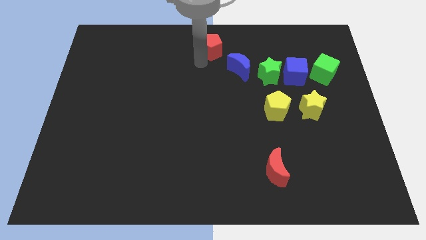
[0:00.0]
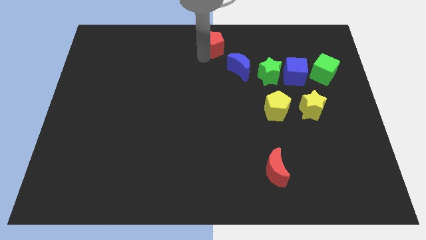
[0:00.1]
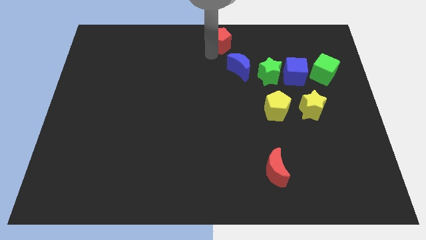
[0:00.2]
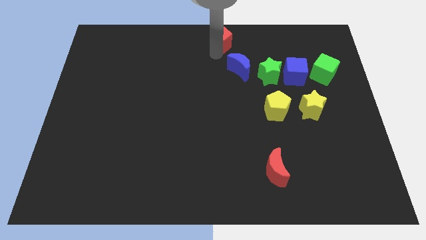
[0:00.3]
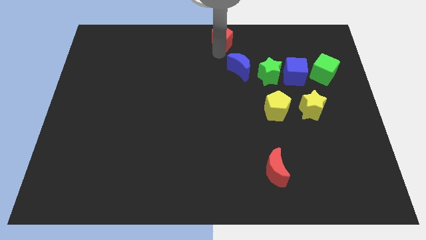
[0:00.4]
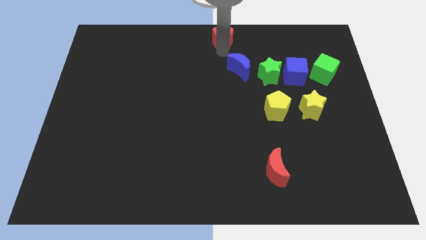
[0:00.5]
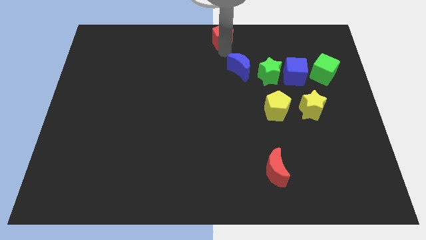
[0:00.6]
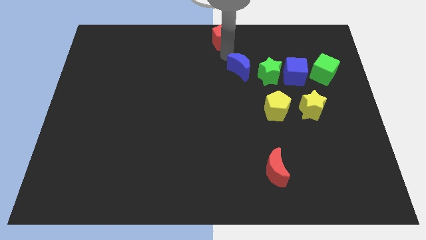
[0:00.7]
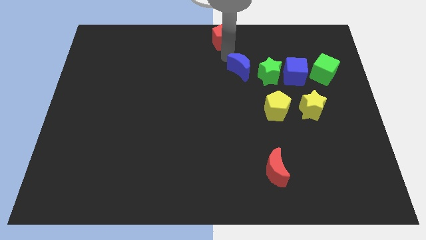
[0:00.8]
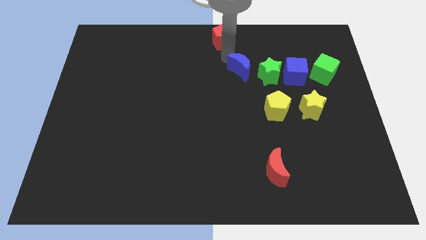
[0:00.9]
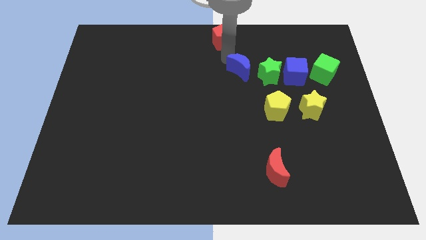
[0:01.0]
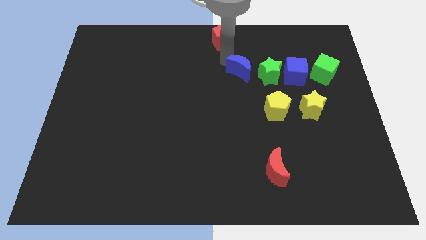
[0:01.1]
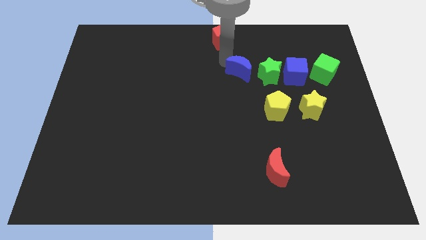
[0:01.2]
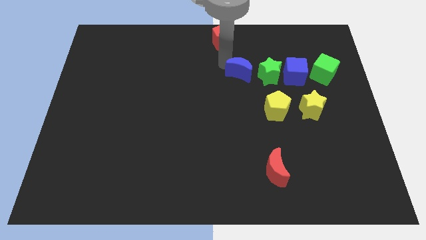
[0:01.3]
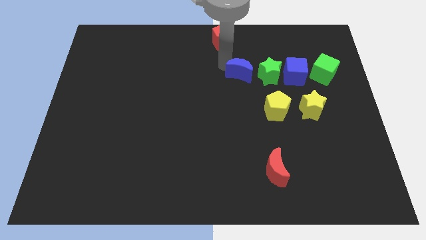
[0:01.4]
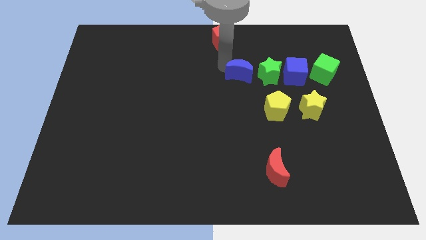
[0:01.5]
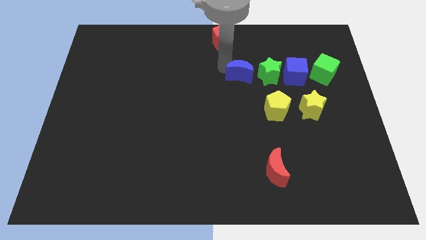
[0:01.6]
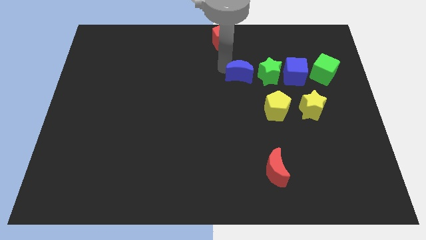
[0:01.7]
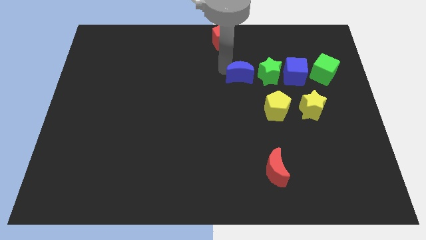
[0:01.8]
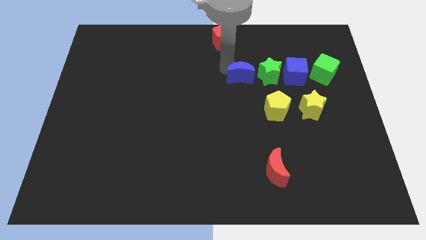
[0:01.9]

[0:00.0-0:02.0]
separate the red pentagon and the blue moon

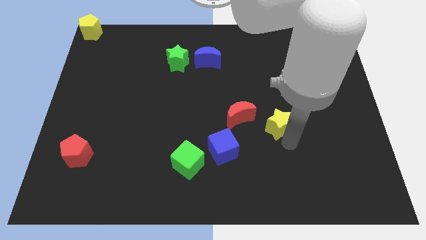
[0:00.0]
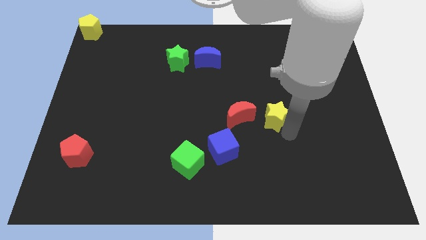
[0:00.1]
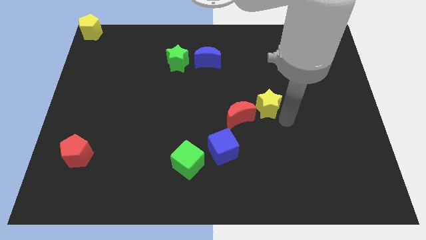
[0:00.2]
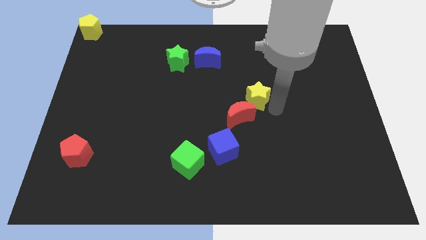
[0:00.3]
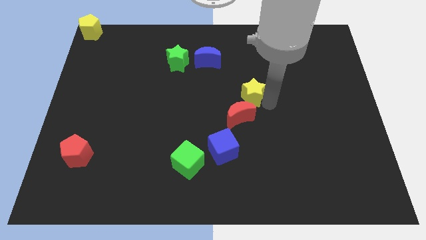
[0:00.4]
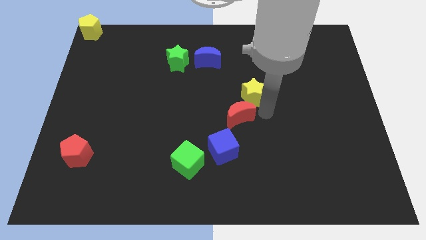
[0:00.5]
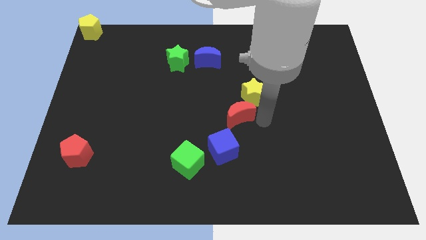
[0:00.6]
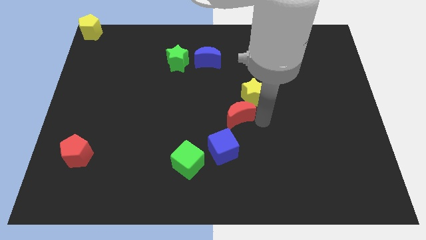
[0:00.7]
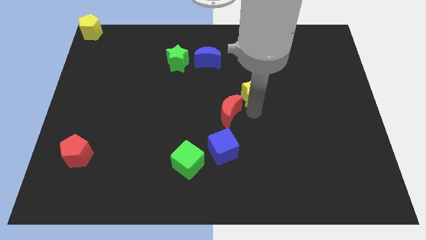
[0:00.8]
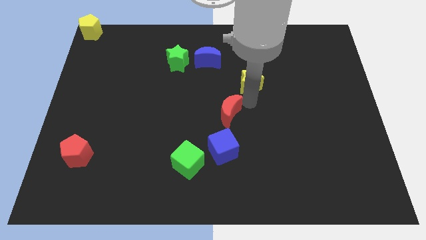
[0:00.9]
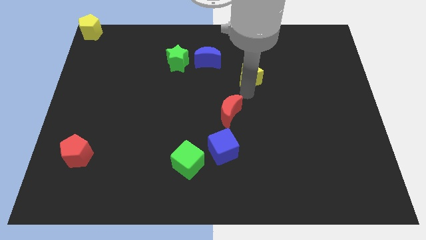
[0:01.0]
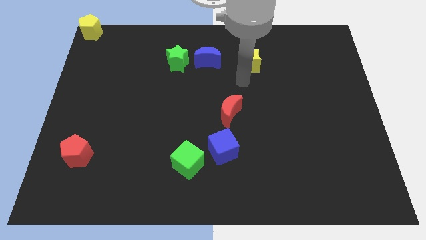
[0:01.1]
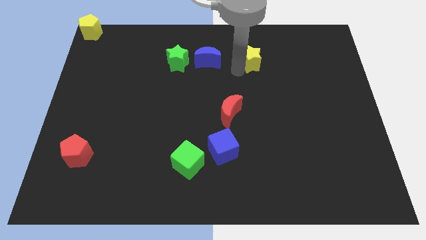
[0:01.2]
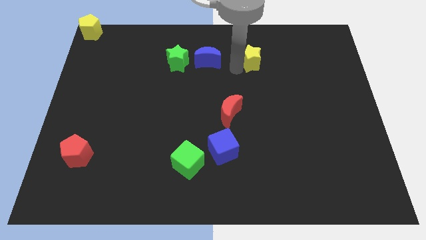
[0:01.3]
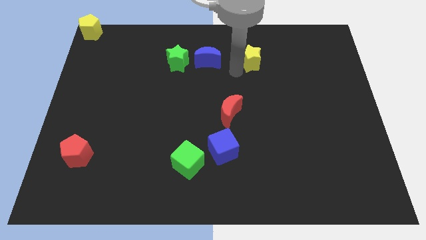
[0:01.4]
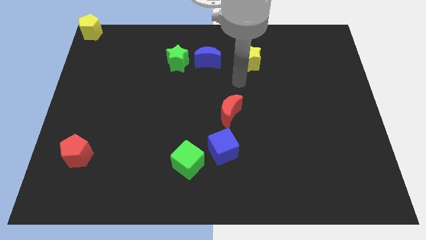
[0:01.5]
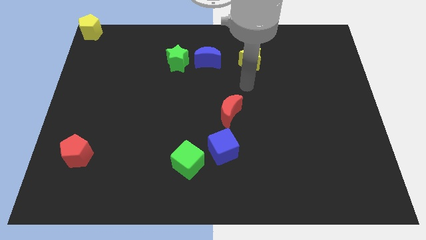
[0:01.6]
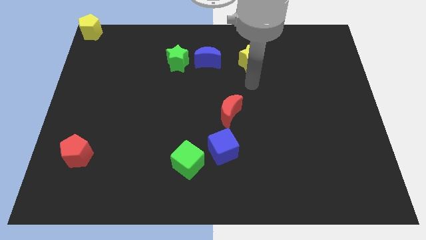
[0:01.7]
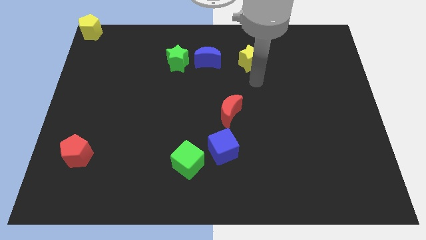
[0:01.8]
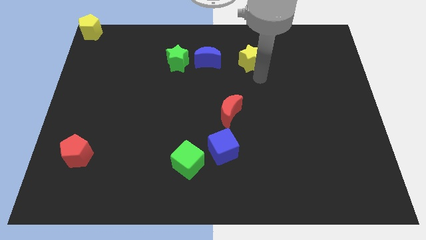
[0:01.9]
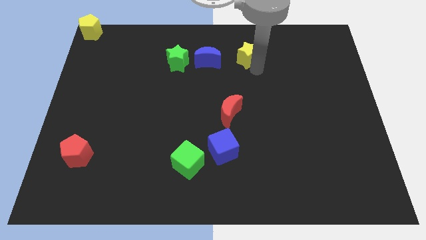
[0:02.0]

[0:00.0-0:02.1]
push the yellow star upwards

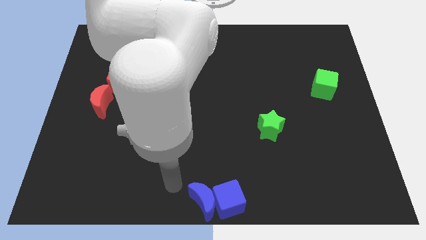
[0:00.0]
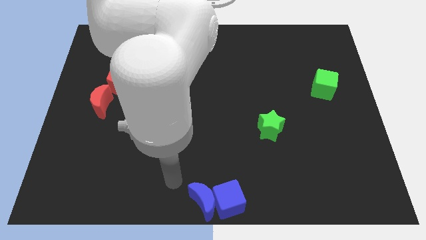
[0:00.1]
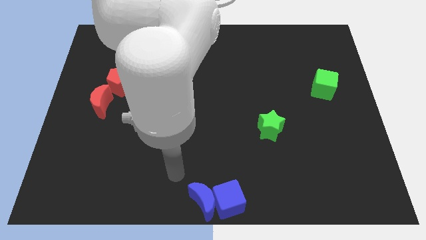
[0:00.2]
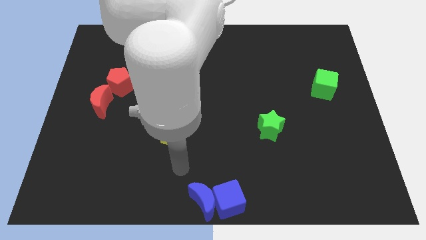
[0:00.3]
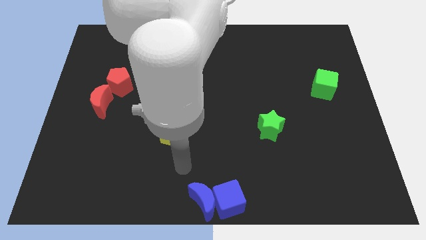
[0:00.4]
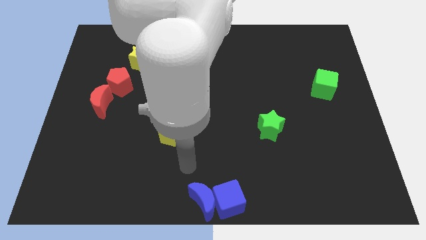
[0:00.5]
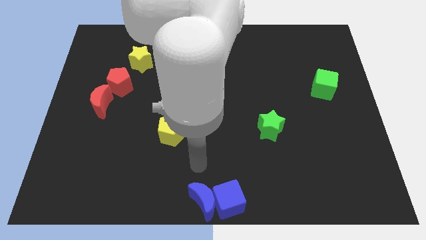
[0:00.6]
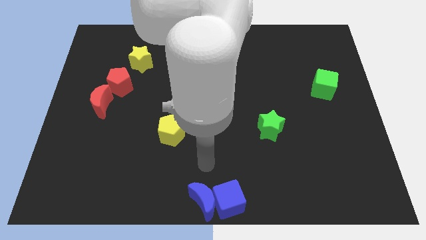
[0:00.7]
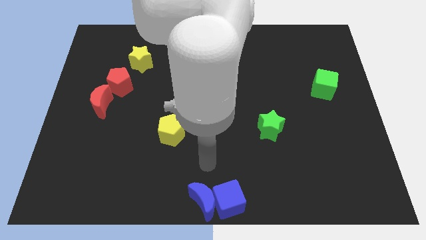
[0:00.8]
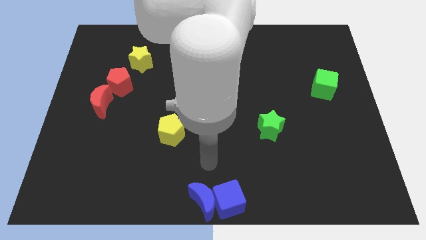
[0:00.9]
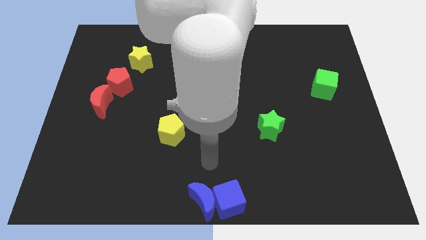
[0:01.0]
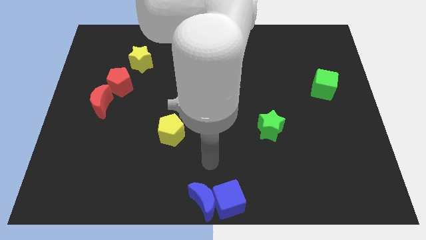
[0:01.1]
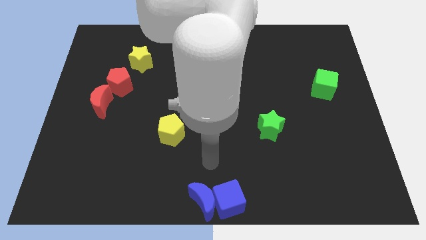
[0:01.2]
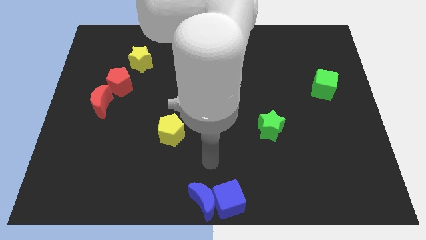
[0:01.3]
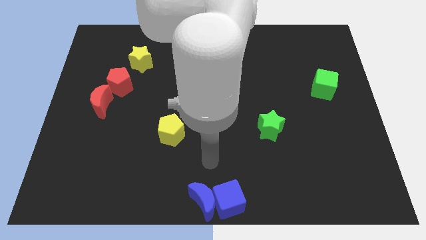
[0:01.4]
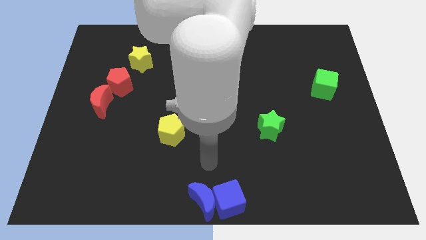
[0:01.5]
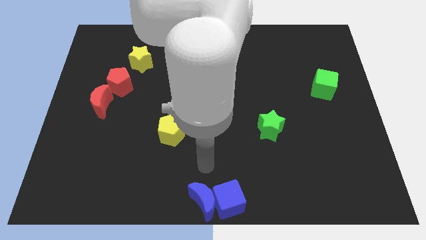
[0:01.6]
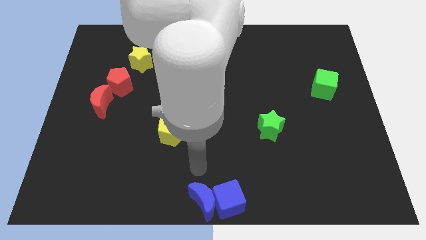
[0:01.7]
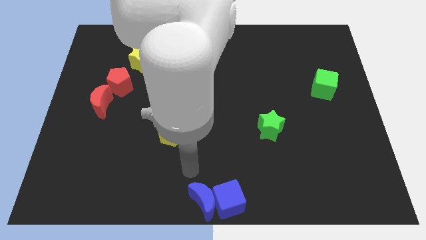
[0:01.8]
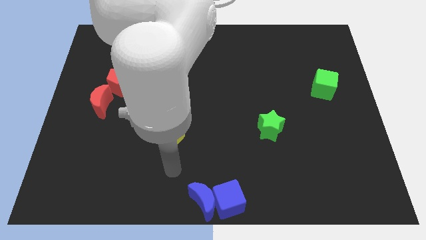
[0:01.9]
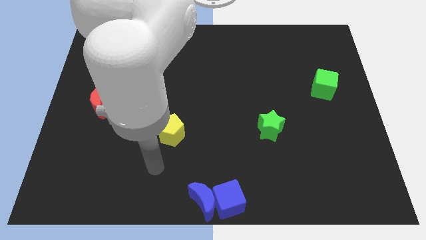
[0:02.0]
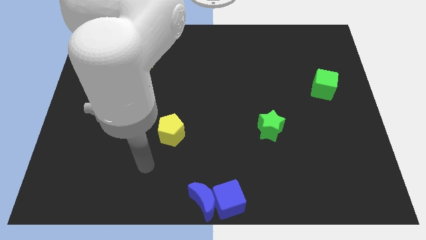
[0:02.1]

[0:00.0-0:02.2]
move your arm towards the bottom of the yellow pentagon

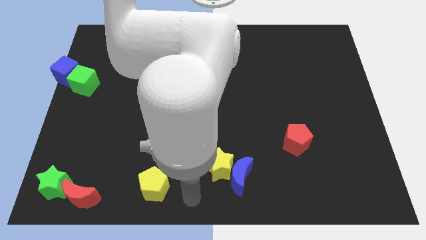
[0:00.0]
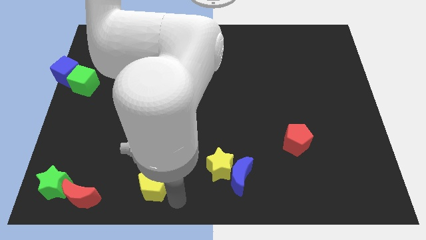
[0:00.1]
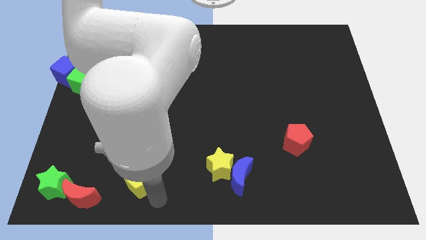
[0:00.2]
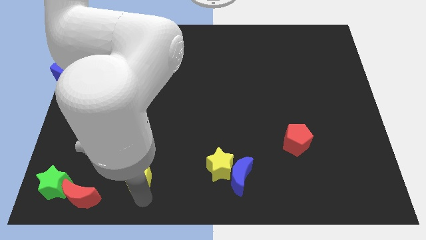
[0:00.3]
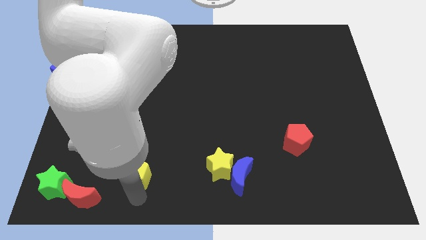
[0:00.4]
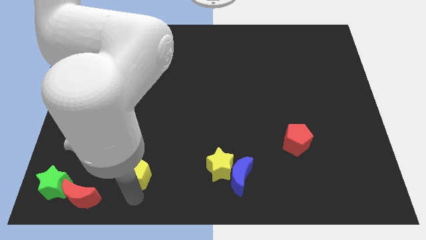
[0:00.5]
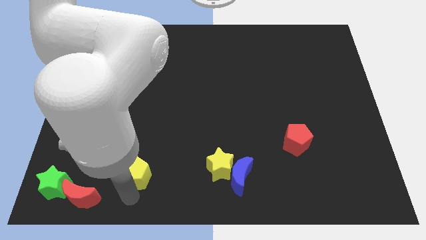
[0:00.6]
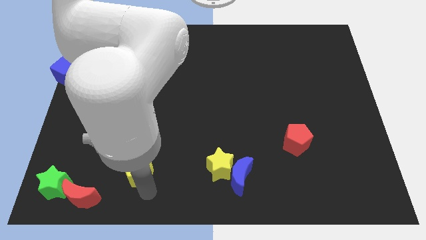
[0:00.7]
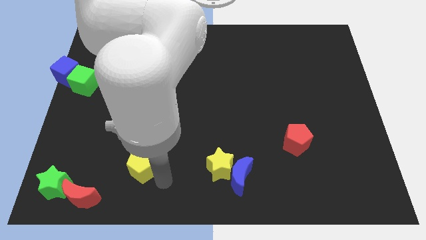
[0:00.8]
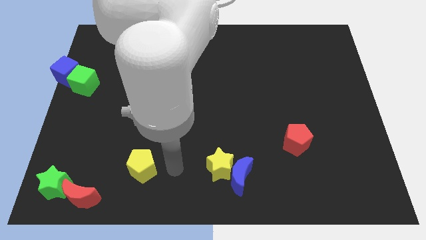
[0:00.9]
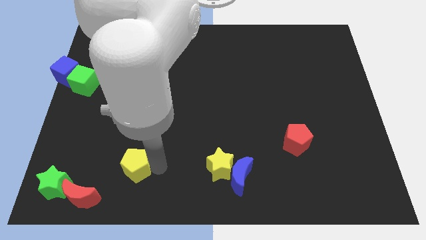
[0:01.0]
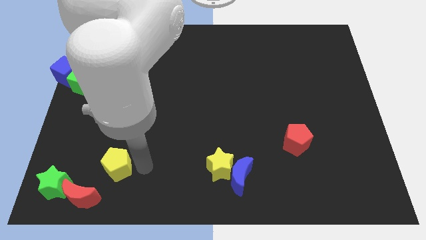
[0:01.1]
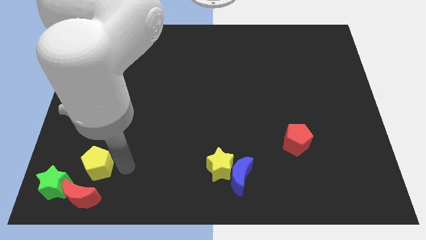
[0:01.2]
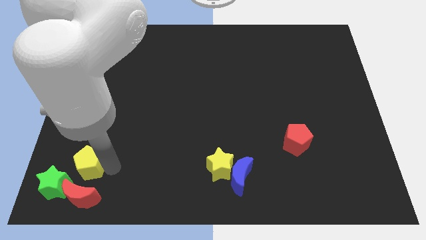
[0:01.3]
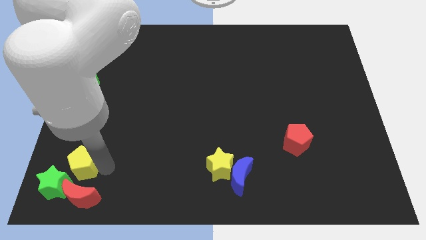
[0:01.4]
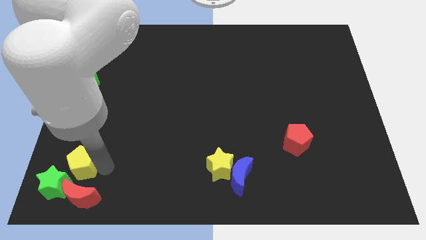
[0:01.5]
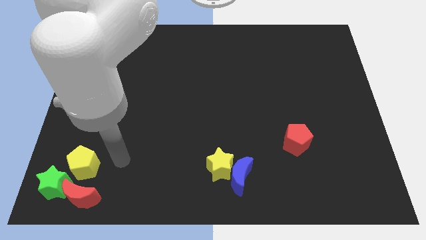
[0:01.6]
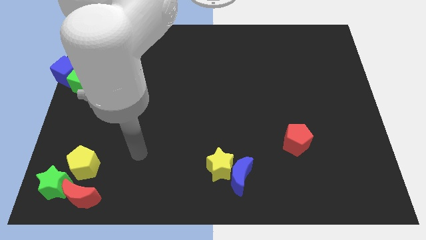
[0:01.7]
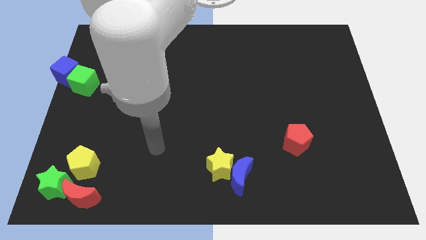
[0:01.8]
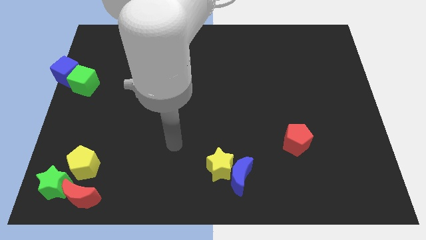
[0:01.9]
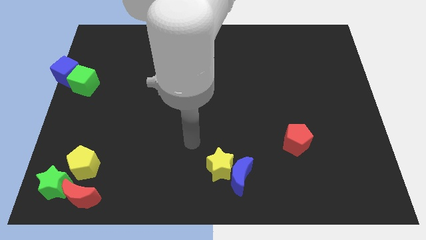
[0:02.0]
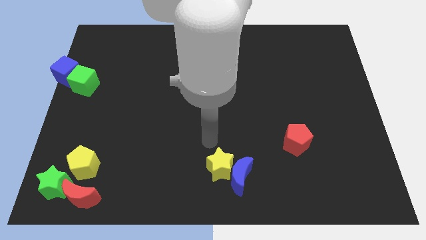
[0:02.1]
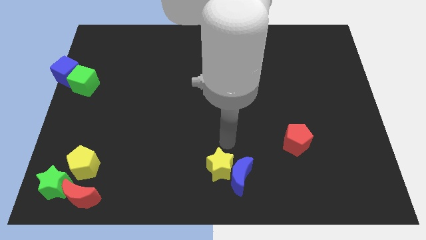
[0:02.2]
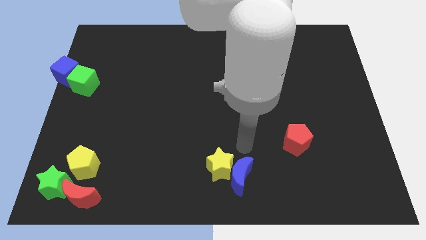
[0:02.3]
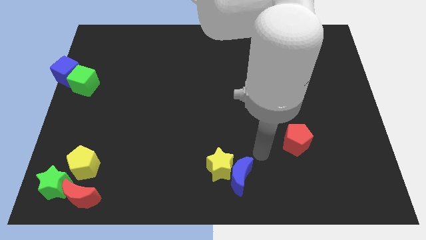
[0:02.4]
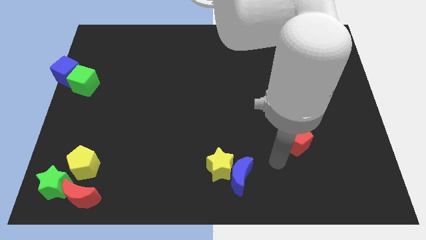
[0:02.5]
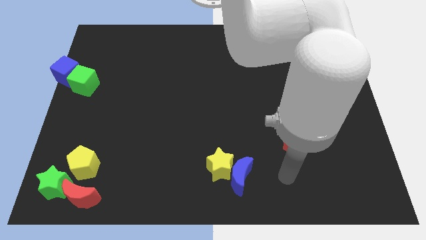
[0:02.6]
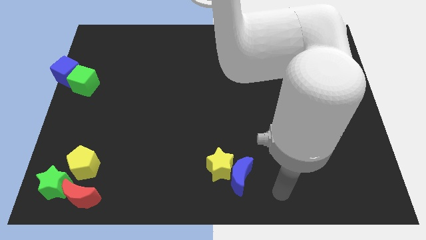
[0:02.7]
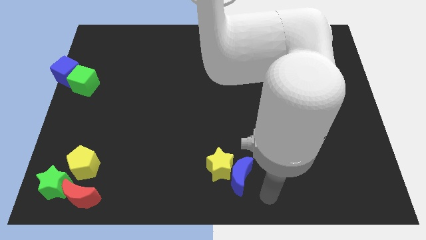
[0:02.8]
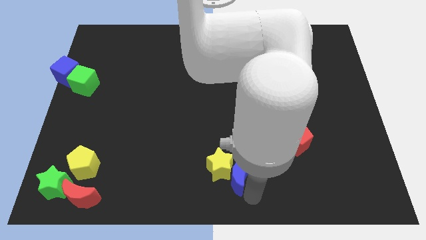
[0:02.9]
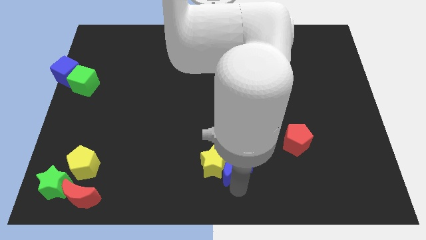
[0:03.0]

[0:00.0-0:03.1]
place the yellow pentagon above the red moon
